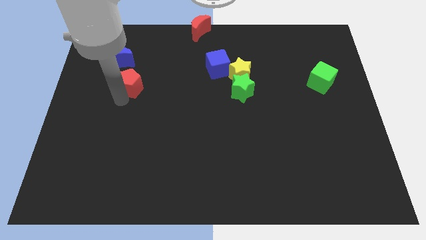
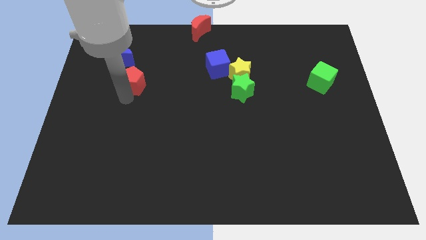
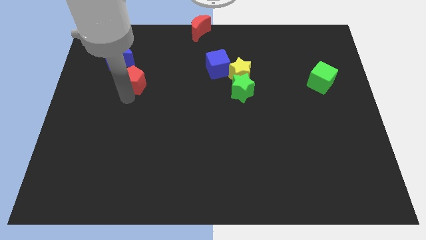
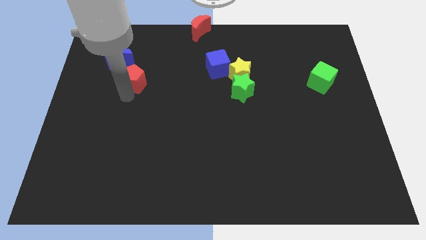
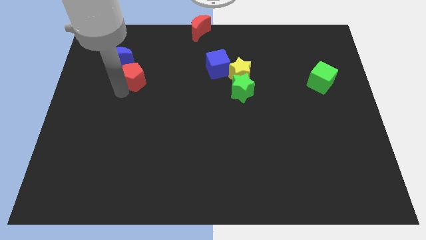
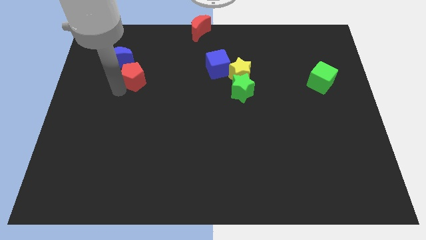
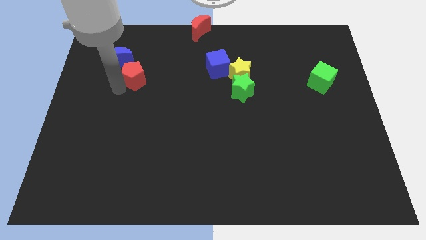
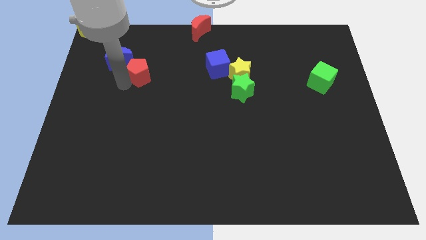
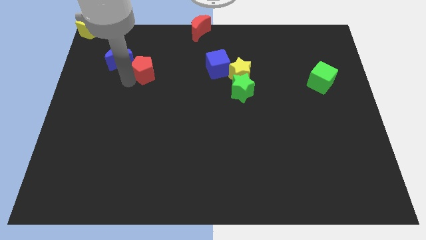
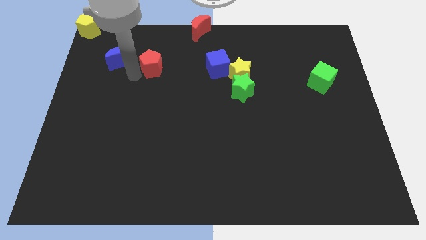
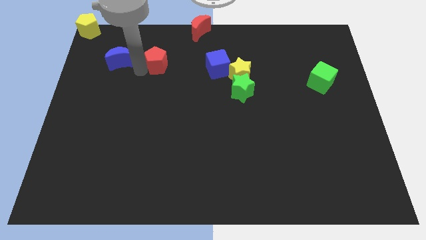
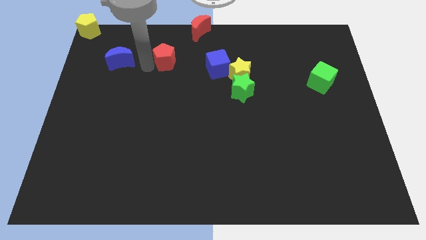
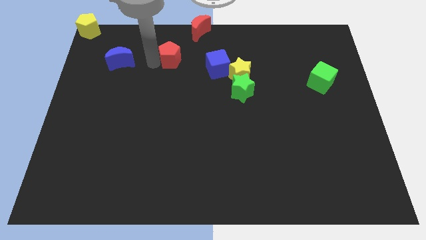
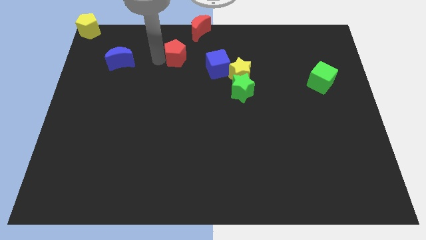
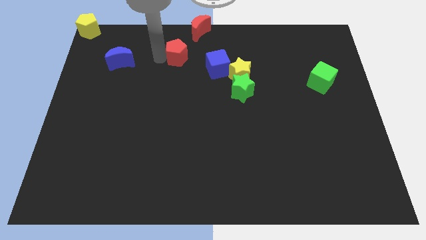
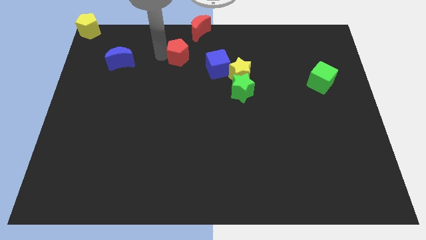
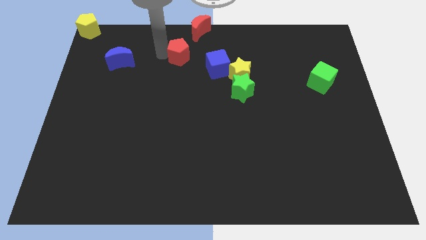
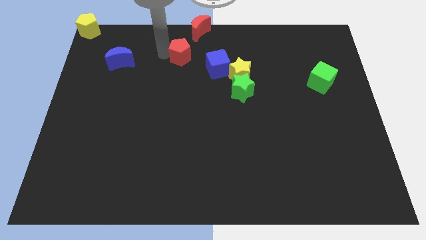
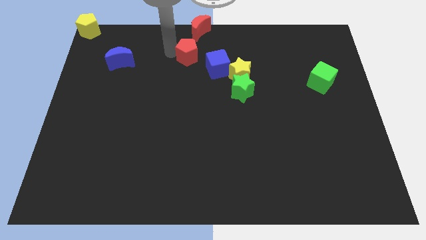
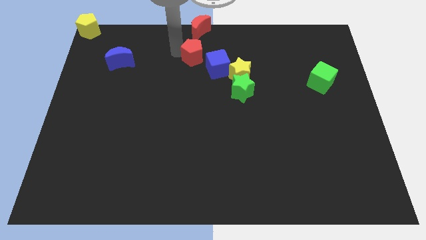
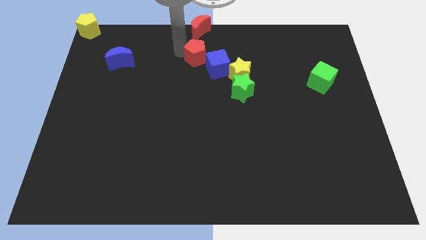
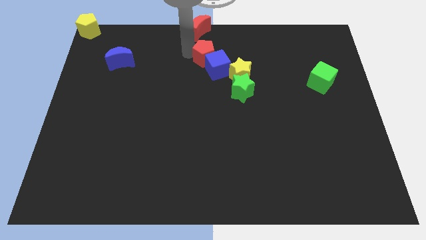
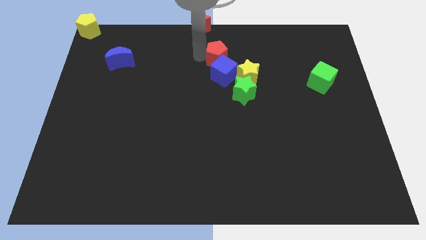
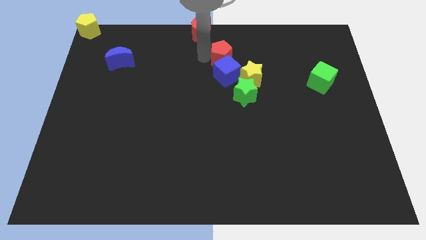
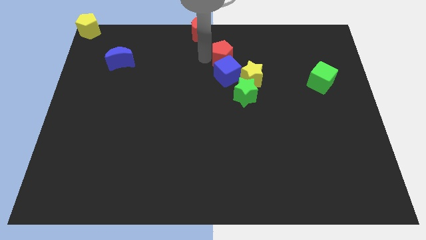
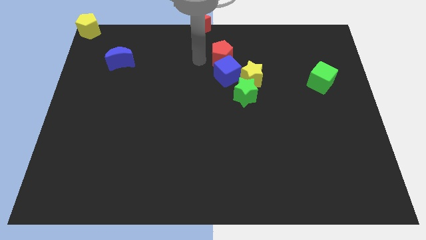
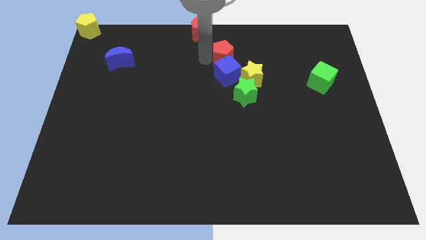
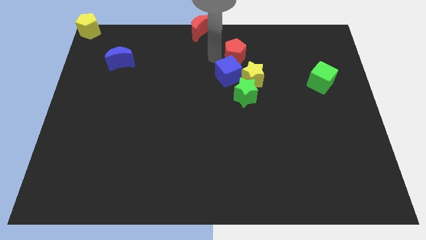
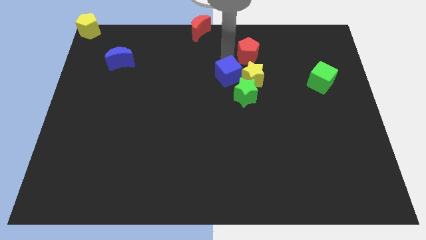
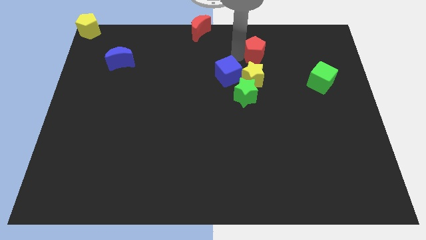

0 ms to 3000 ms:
push red pentagon above yellow star

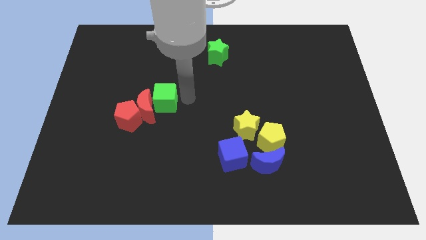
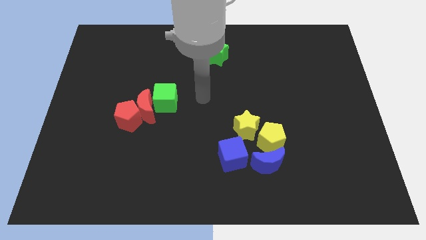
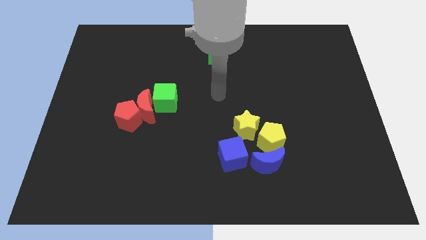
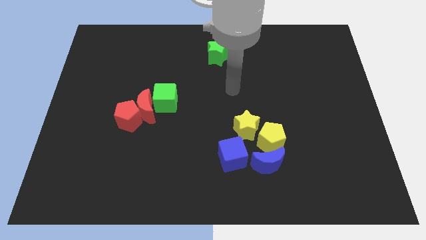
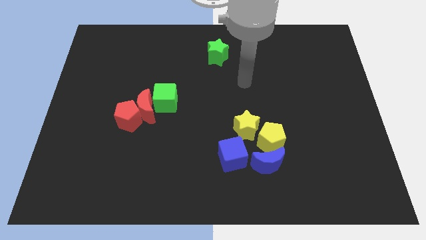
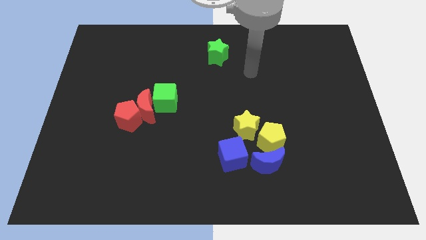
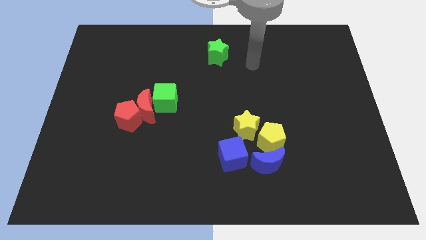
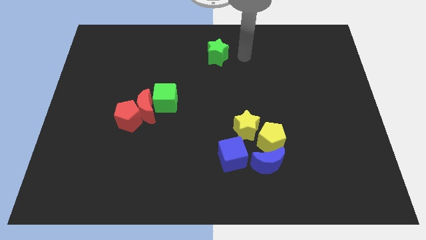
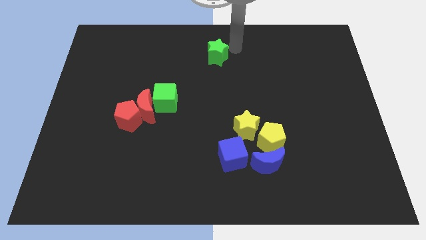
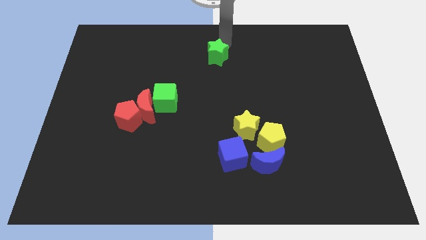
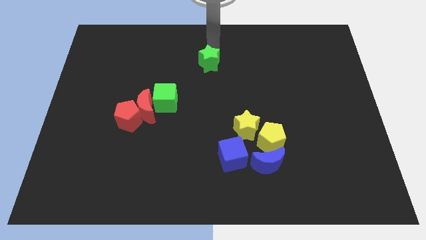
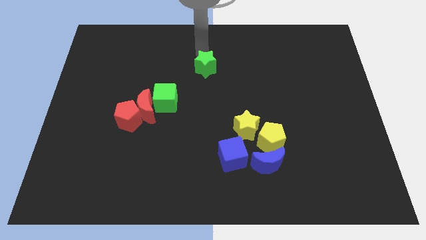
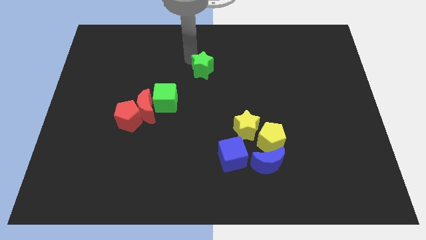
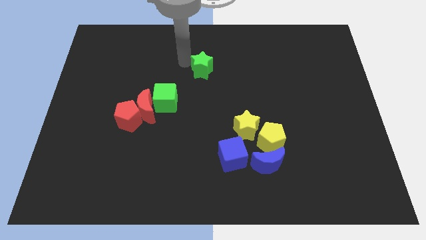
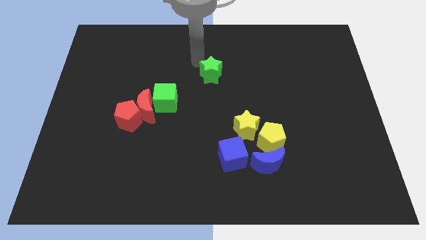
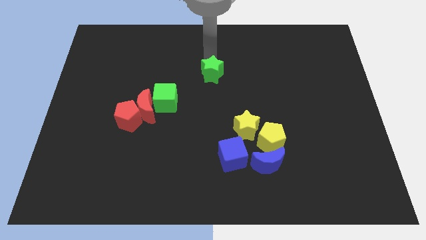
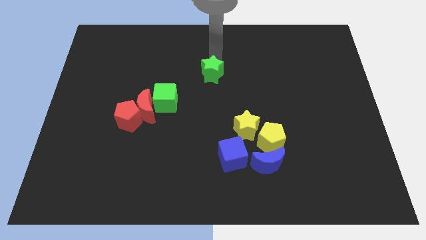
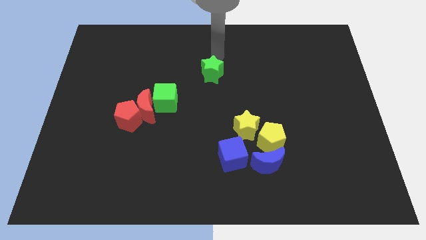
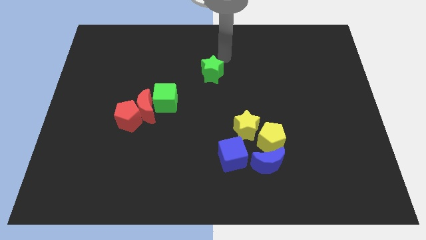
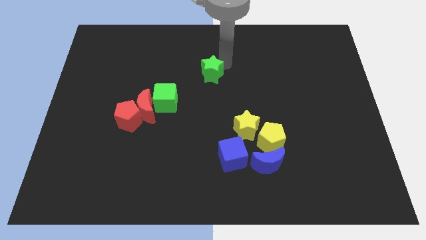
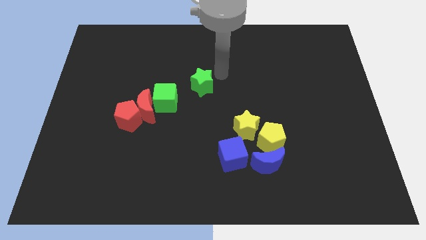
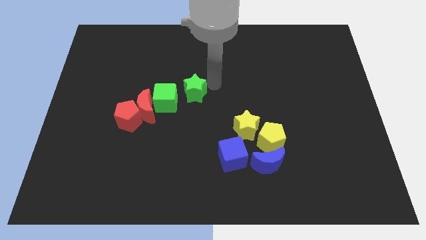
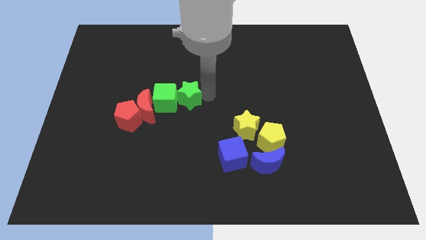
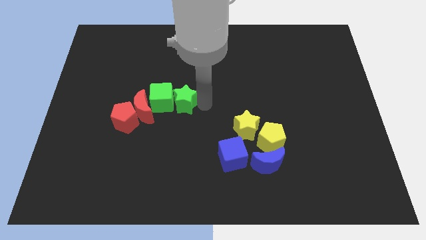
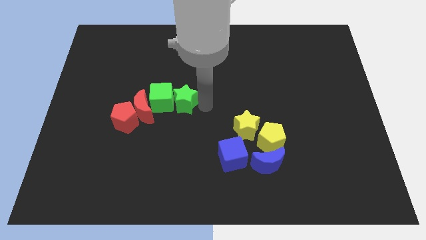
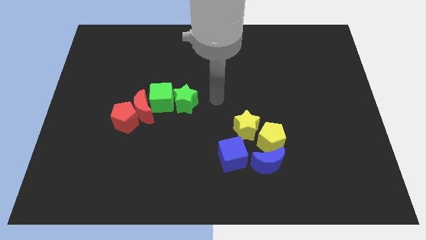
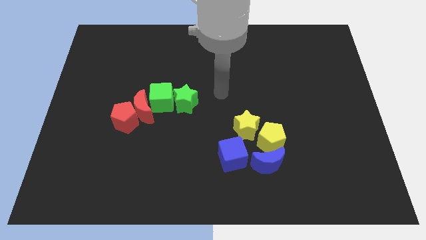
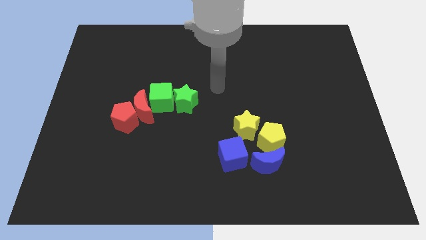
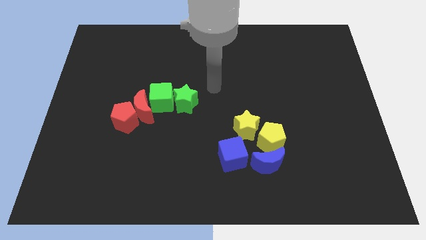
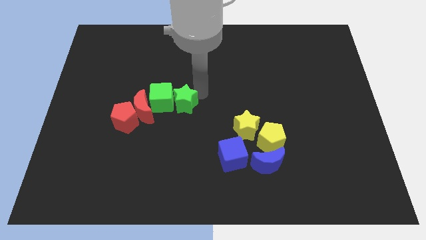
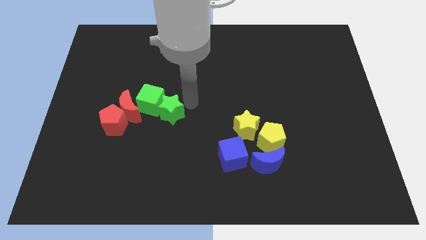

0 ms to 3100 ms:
push the green star into the green cube

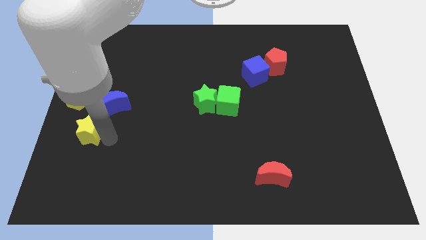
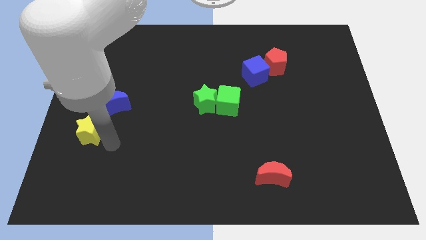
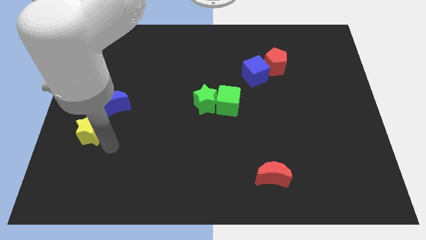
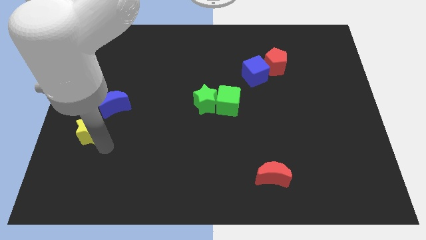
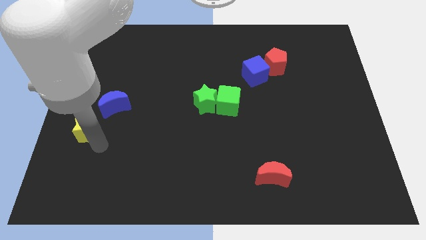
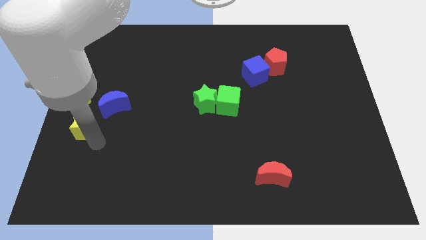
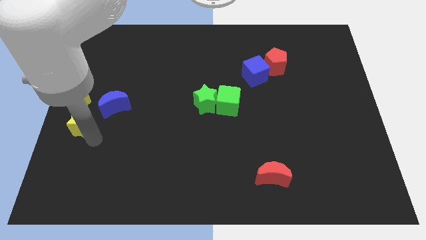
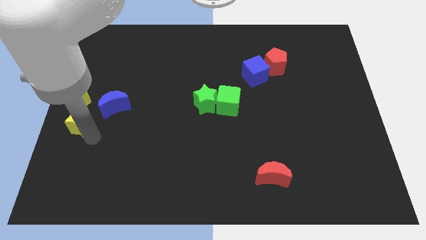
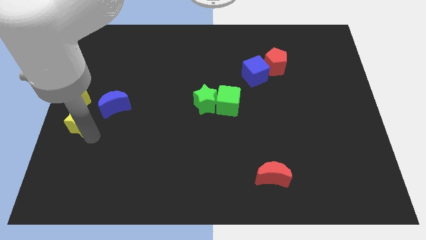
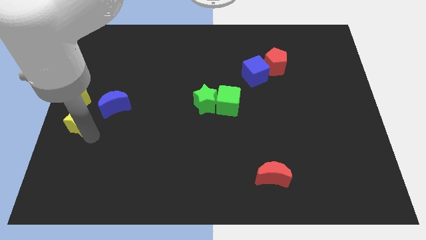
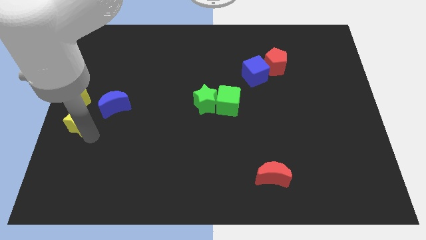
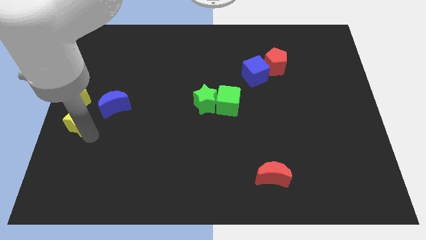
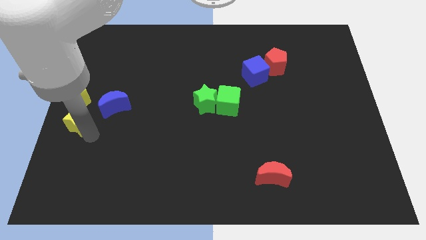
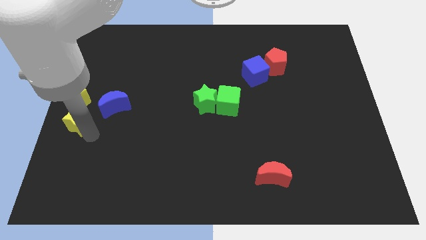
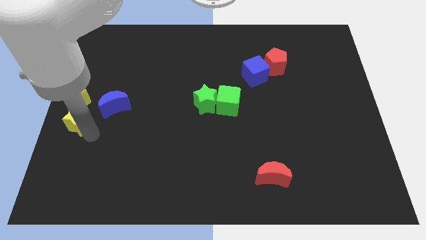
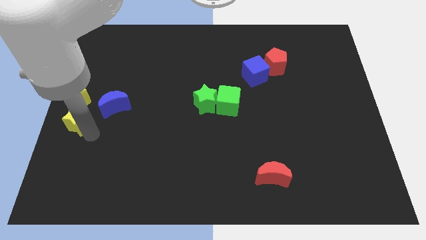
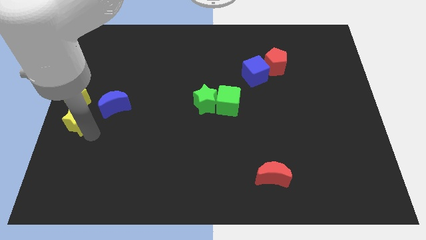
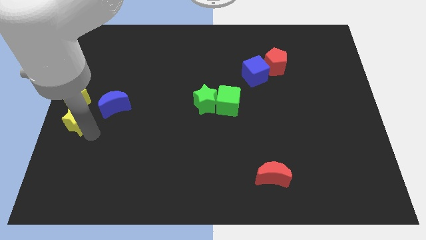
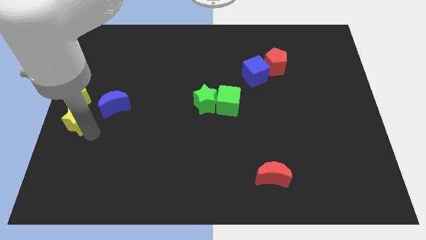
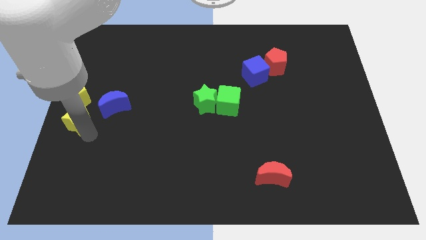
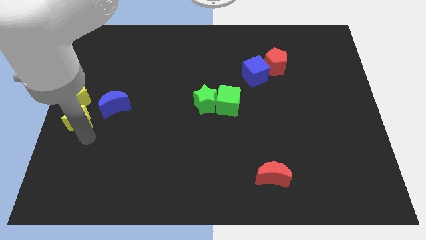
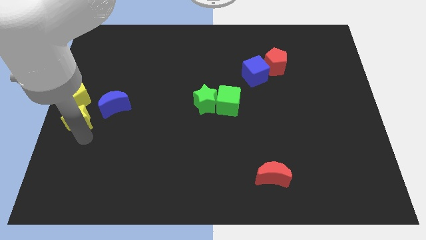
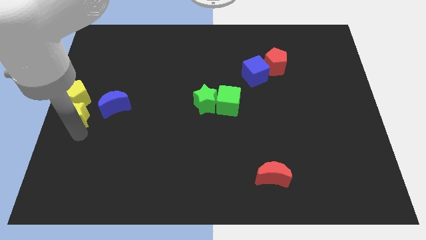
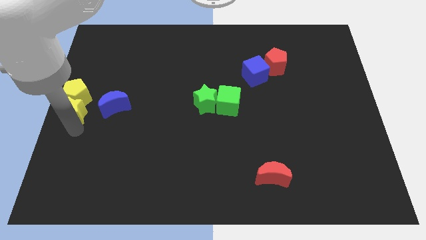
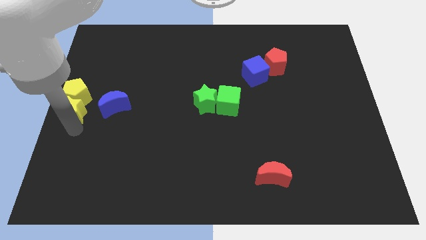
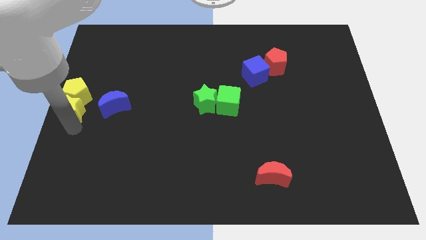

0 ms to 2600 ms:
move the yellow star to the left center of the board

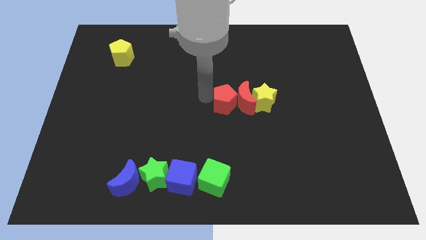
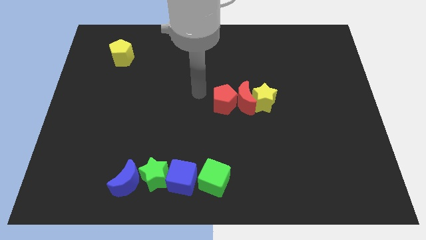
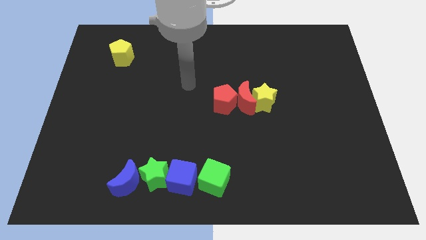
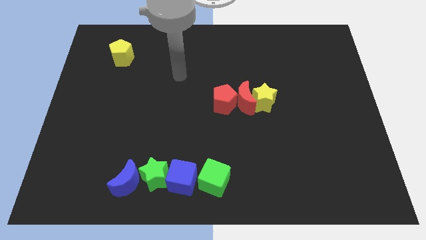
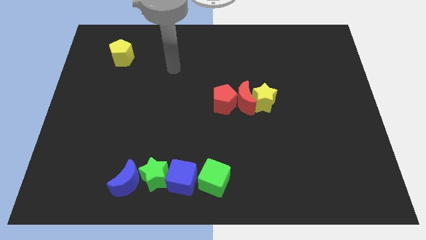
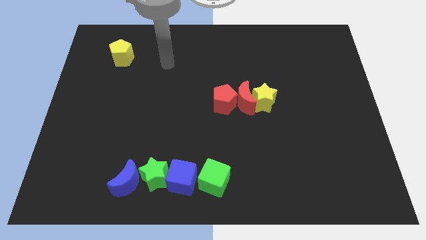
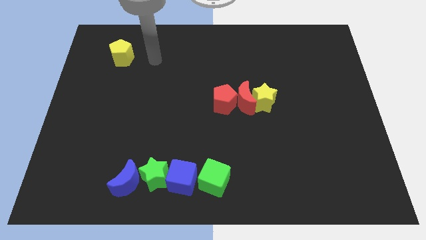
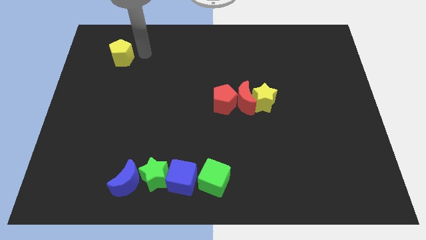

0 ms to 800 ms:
move your hand away from the left side of the red pentagon
